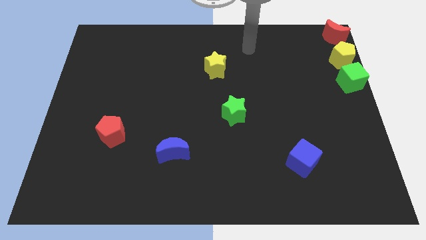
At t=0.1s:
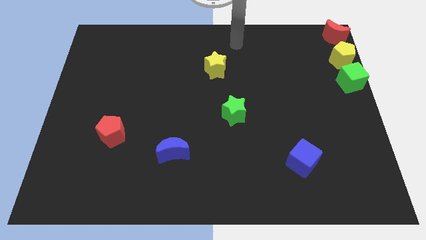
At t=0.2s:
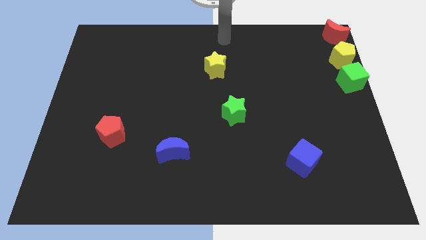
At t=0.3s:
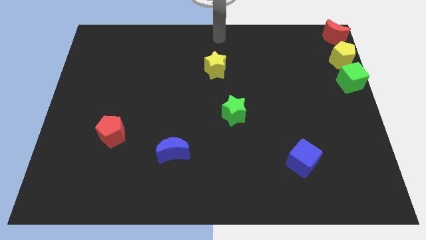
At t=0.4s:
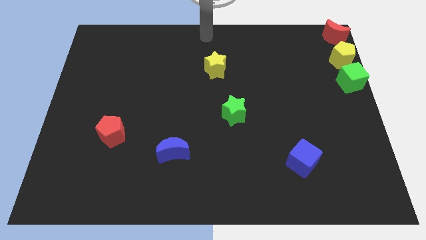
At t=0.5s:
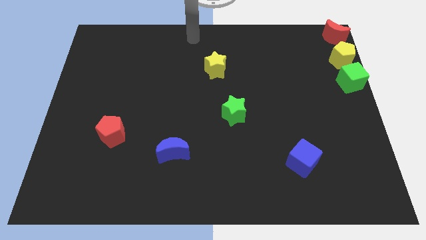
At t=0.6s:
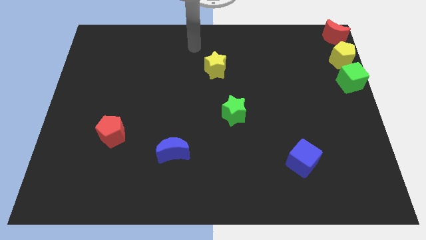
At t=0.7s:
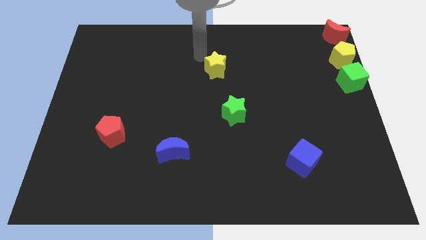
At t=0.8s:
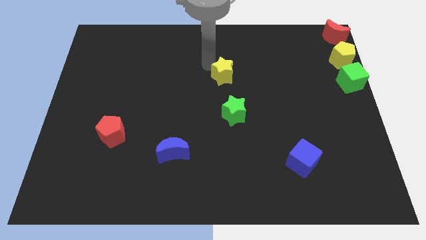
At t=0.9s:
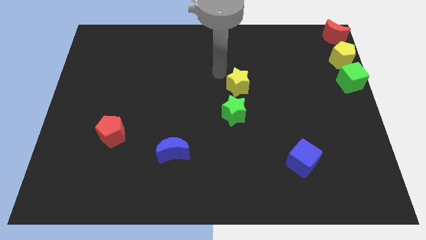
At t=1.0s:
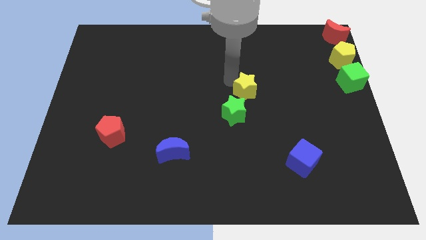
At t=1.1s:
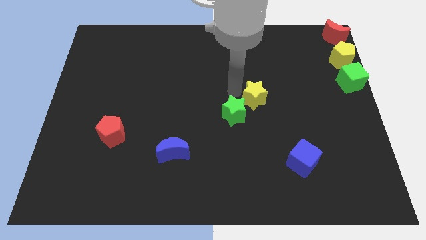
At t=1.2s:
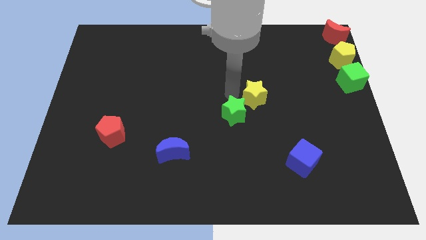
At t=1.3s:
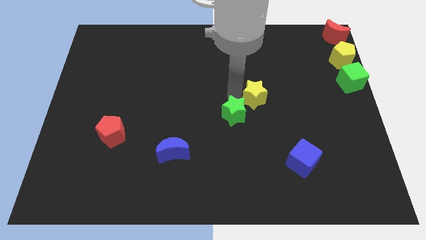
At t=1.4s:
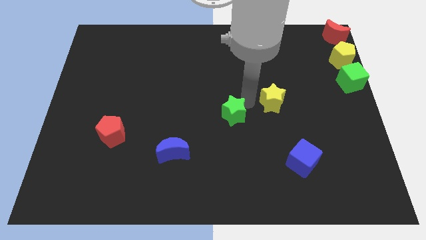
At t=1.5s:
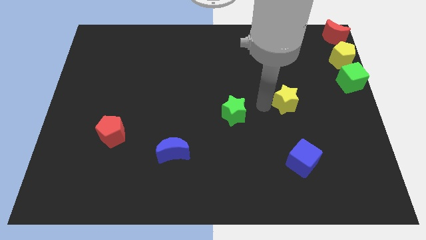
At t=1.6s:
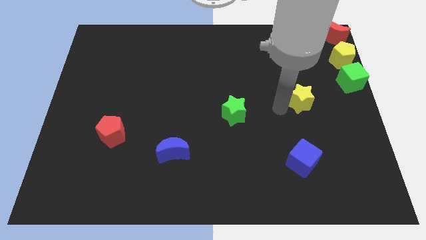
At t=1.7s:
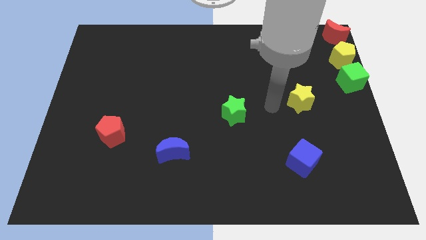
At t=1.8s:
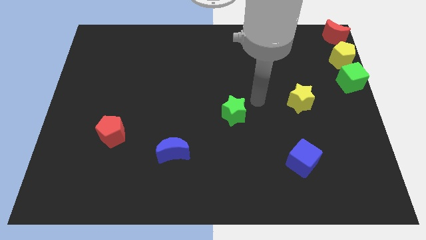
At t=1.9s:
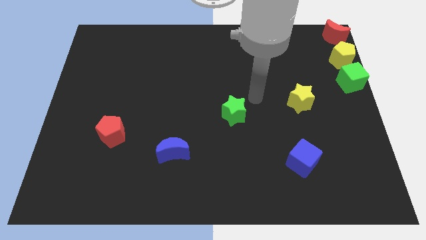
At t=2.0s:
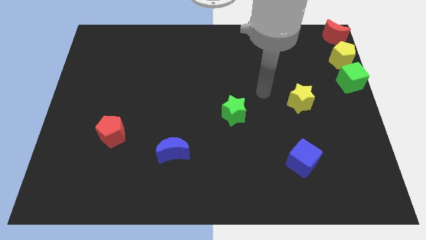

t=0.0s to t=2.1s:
slide yellow star in between green cube and green star

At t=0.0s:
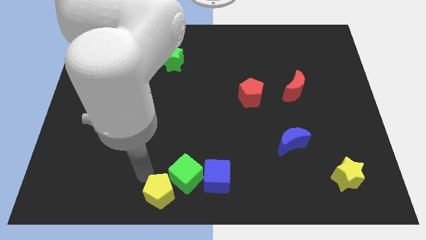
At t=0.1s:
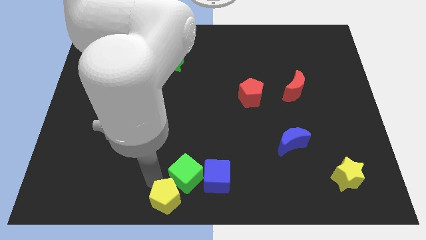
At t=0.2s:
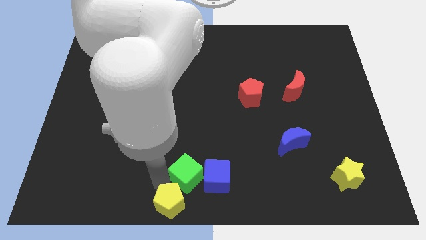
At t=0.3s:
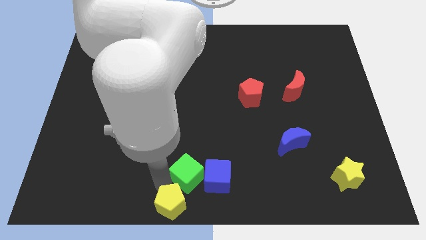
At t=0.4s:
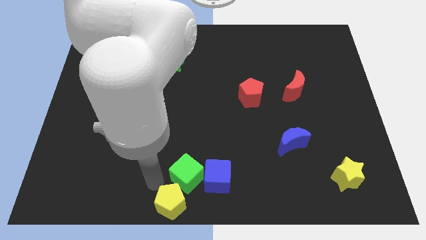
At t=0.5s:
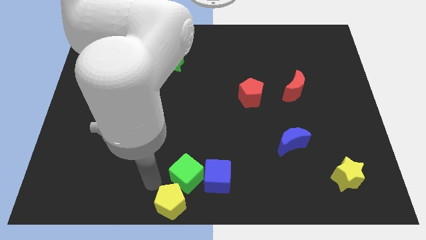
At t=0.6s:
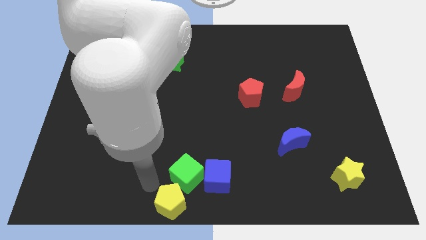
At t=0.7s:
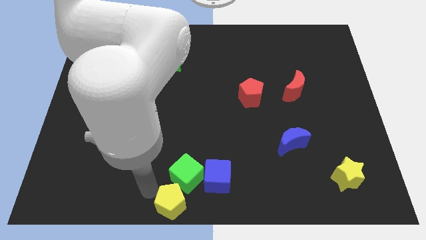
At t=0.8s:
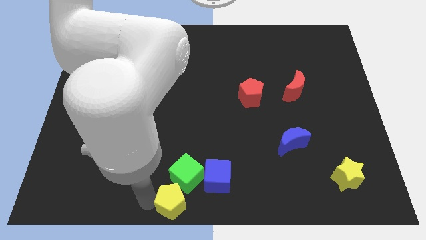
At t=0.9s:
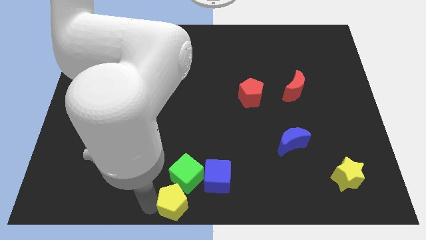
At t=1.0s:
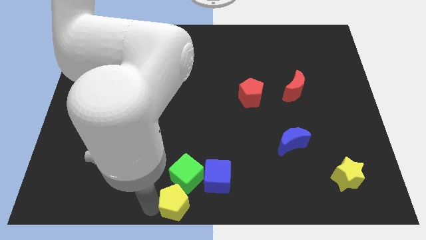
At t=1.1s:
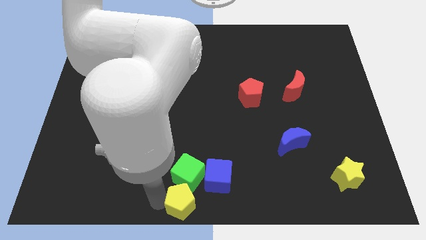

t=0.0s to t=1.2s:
place yellow star below green cube

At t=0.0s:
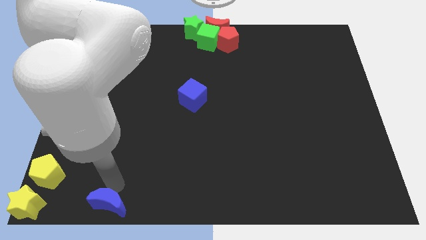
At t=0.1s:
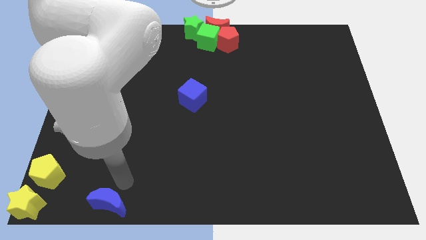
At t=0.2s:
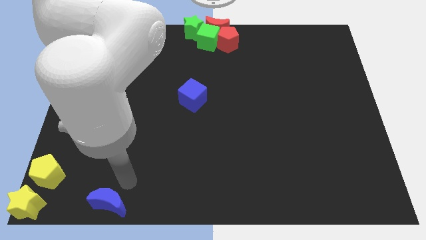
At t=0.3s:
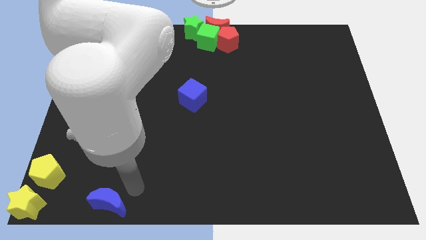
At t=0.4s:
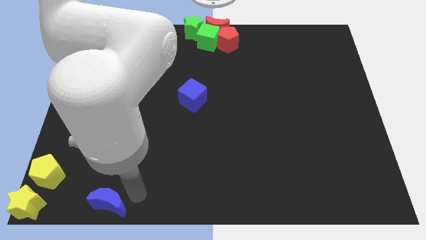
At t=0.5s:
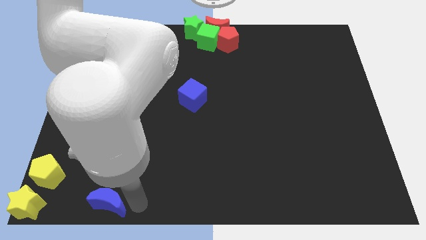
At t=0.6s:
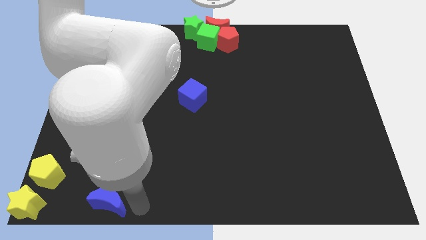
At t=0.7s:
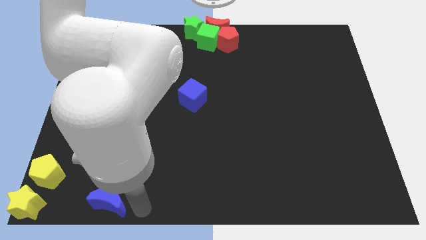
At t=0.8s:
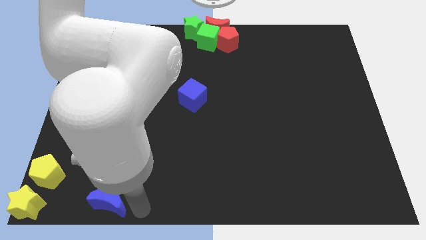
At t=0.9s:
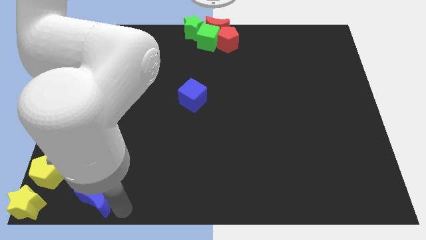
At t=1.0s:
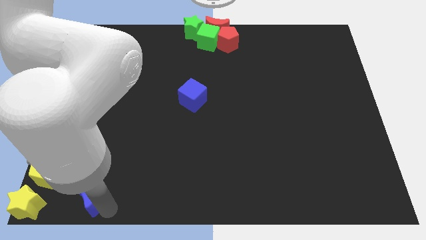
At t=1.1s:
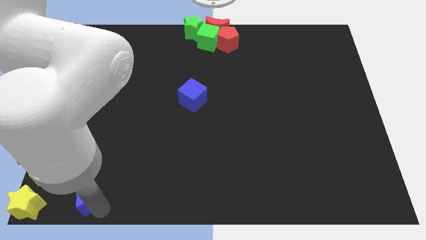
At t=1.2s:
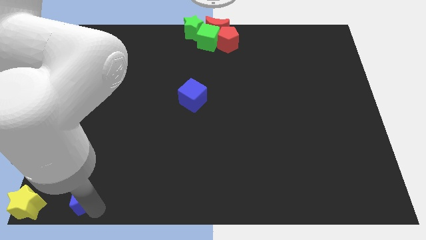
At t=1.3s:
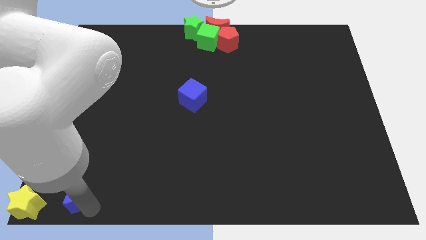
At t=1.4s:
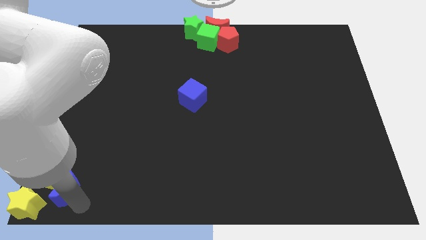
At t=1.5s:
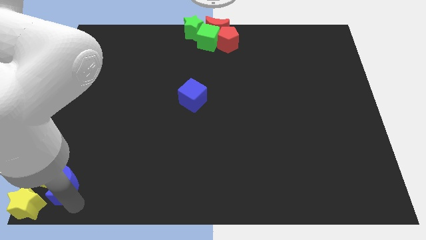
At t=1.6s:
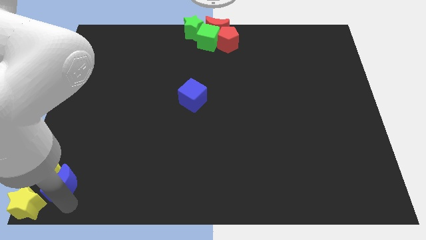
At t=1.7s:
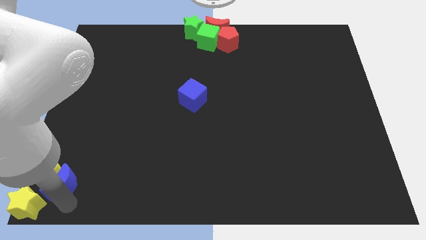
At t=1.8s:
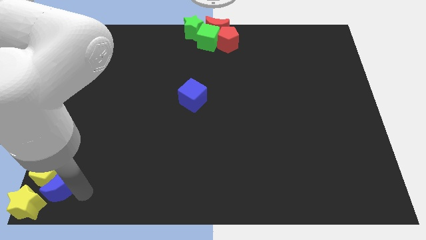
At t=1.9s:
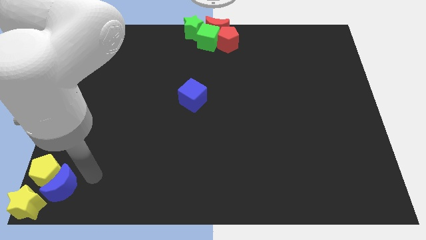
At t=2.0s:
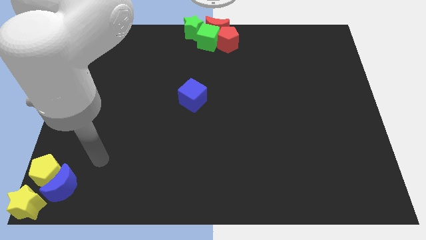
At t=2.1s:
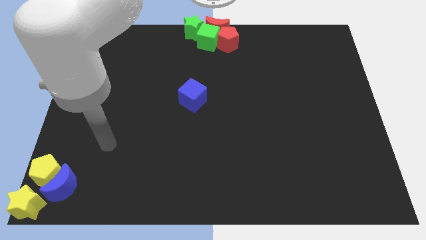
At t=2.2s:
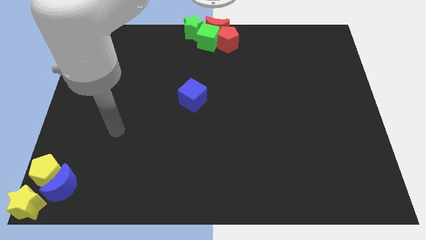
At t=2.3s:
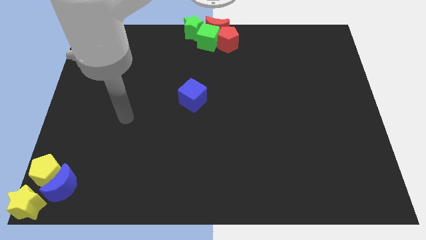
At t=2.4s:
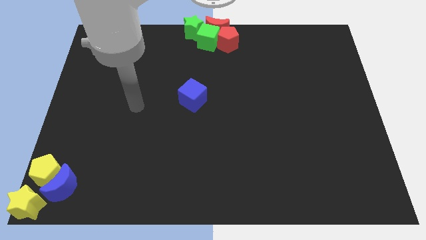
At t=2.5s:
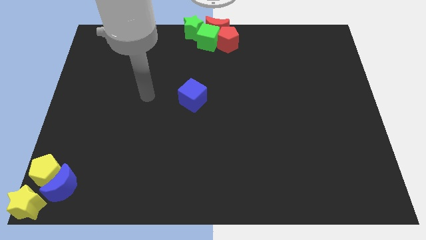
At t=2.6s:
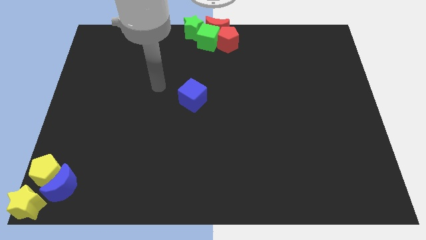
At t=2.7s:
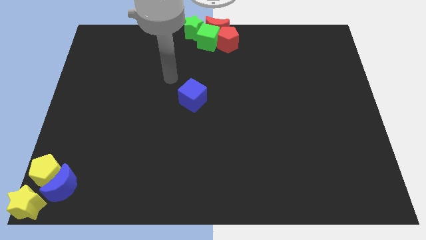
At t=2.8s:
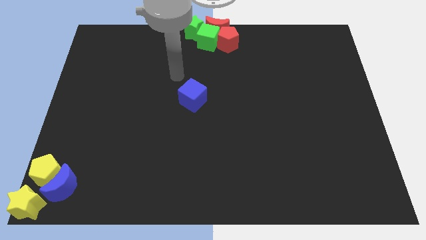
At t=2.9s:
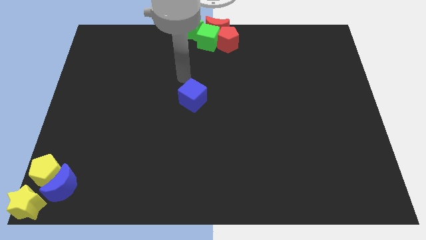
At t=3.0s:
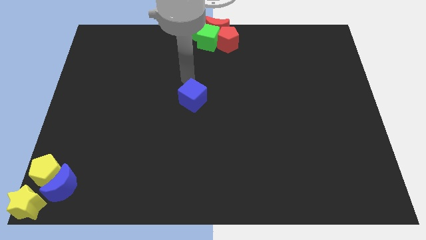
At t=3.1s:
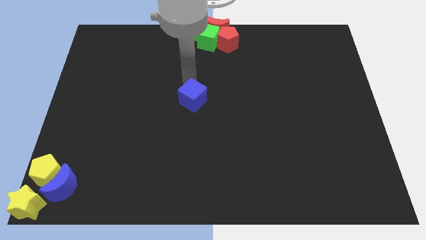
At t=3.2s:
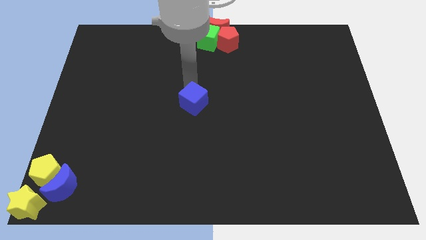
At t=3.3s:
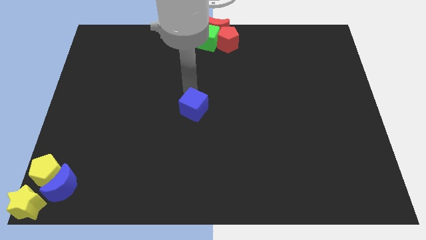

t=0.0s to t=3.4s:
place blue moon to the right of yellow pentagon

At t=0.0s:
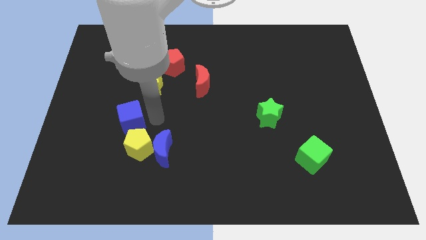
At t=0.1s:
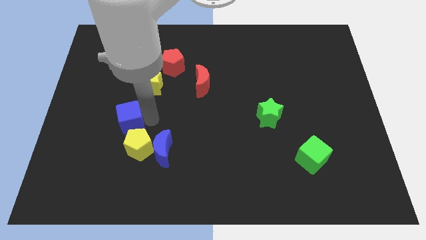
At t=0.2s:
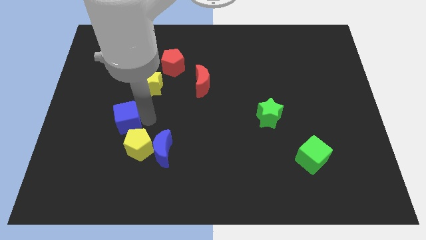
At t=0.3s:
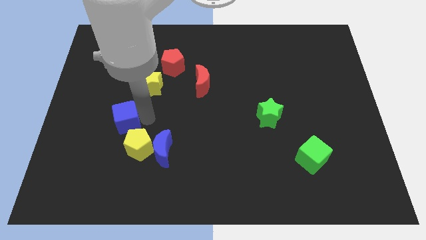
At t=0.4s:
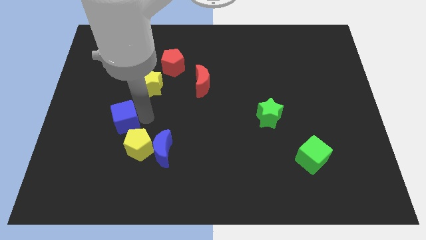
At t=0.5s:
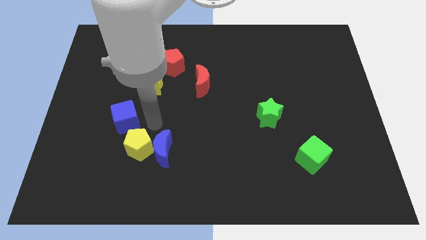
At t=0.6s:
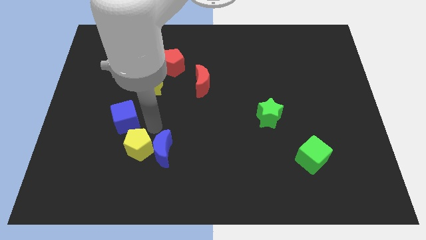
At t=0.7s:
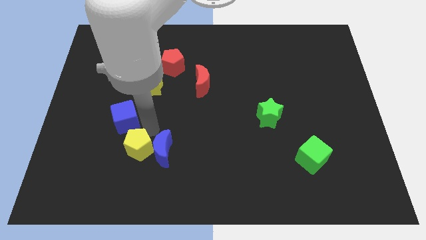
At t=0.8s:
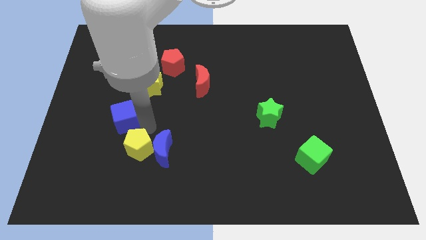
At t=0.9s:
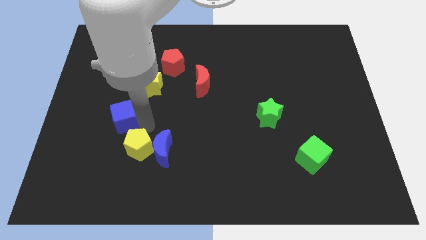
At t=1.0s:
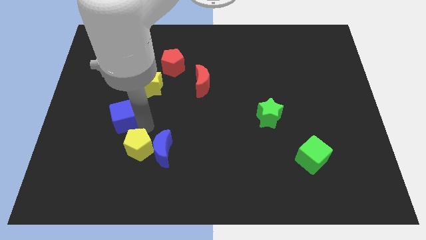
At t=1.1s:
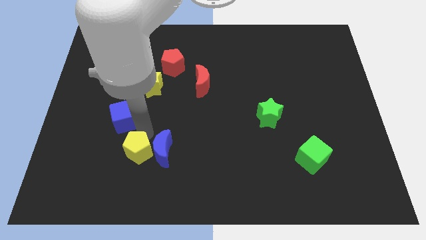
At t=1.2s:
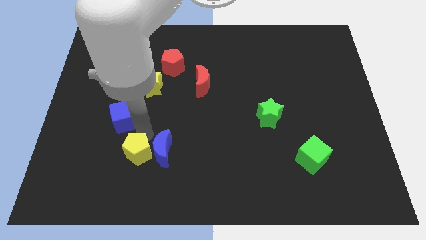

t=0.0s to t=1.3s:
place your arm above the yellow pentagon

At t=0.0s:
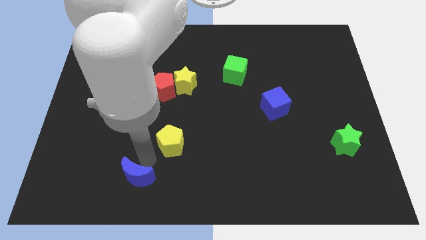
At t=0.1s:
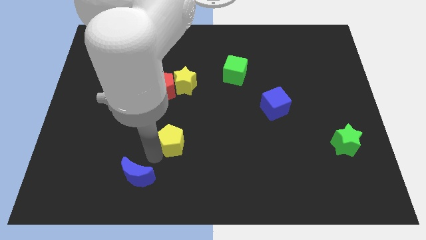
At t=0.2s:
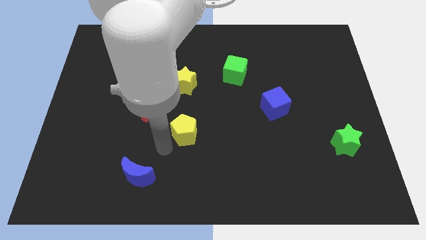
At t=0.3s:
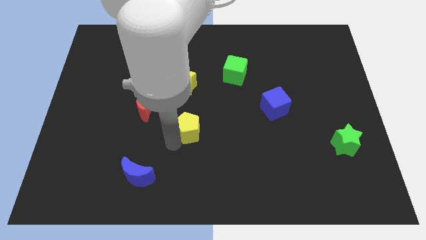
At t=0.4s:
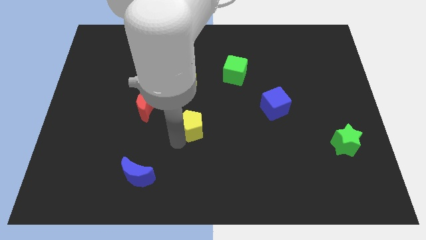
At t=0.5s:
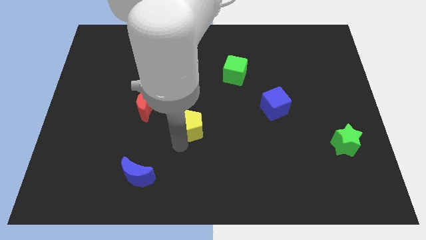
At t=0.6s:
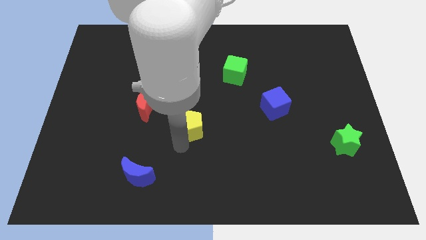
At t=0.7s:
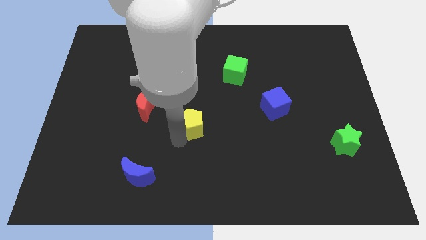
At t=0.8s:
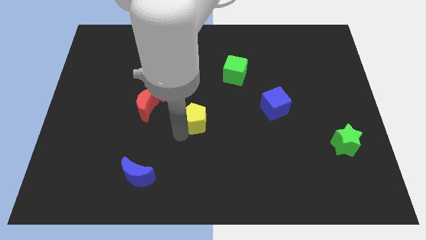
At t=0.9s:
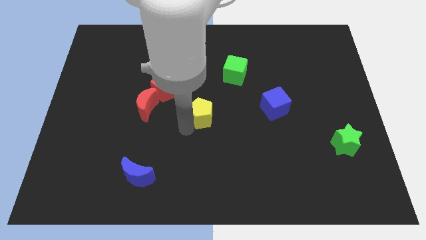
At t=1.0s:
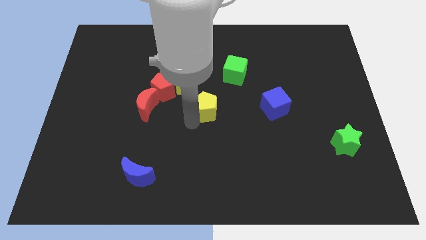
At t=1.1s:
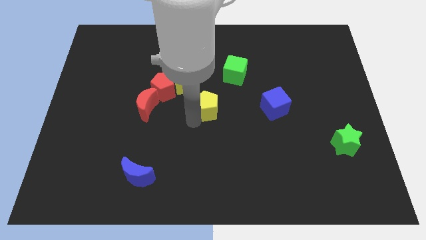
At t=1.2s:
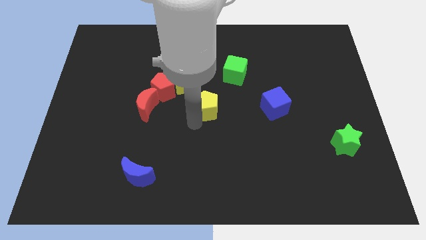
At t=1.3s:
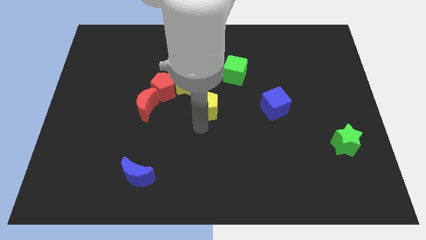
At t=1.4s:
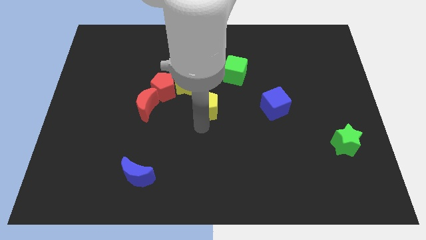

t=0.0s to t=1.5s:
push the yellow pentagon to the center of the board
